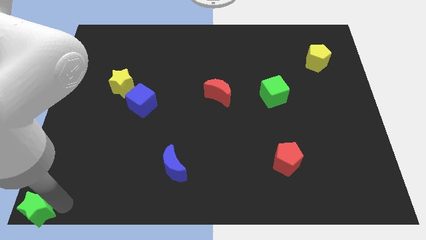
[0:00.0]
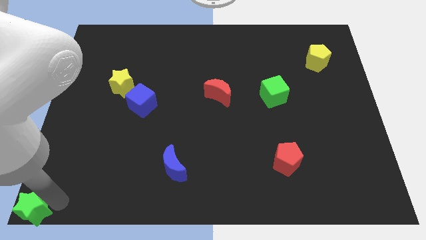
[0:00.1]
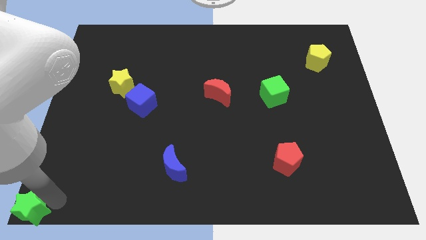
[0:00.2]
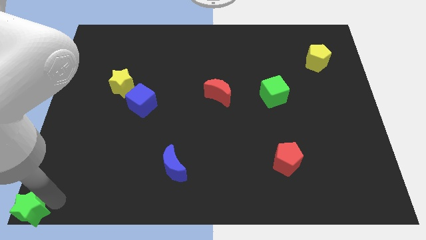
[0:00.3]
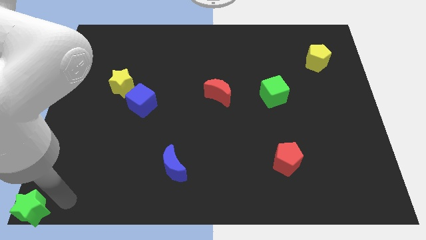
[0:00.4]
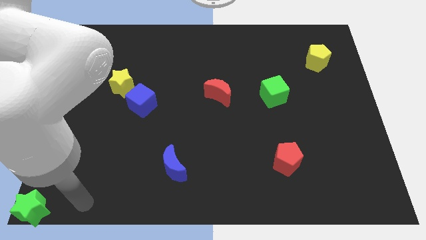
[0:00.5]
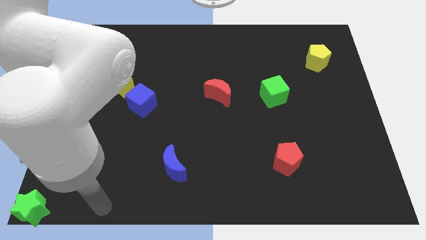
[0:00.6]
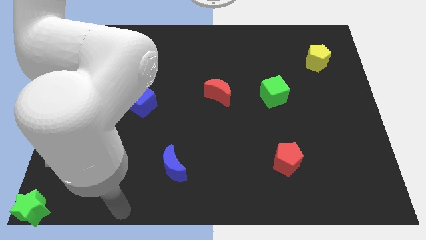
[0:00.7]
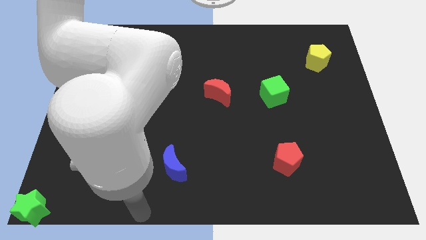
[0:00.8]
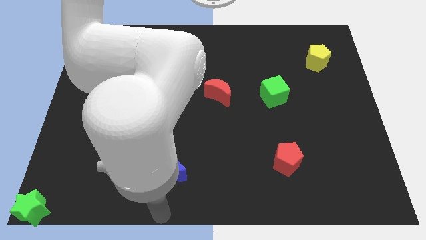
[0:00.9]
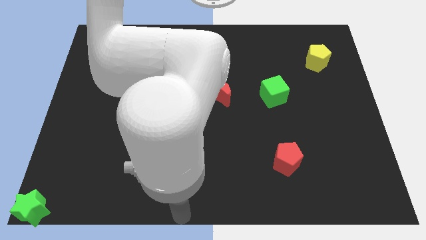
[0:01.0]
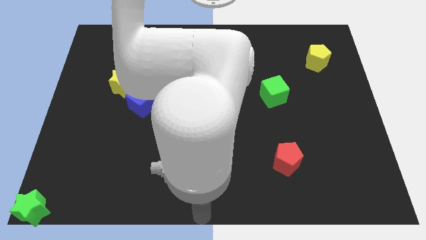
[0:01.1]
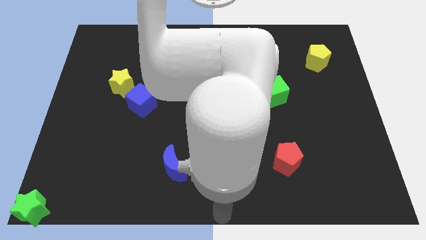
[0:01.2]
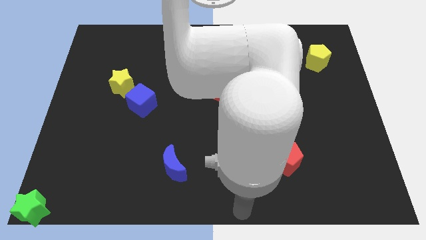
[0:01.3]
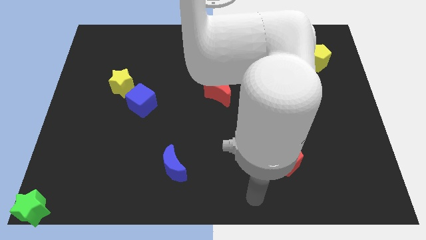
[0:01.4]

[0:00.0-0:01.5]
move the arm to the right side of the board

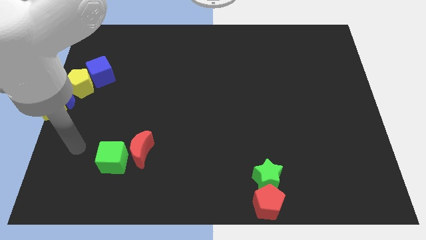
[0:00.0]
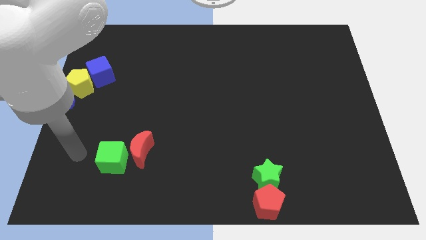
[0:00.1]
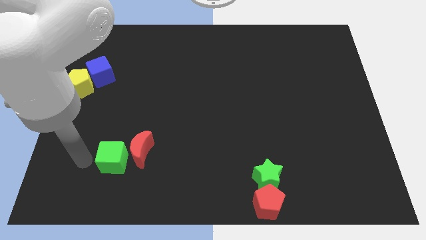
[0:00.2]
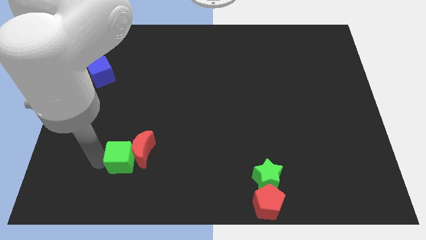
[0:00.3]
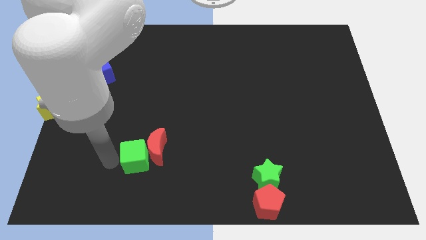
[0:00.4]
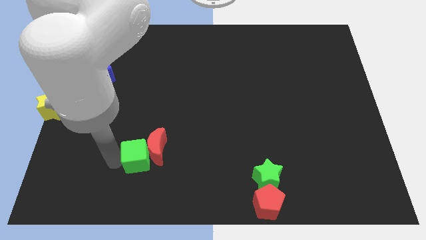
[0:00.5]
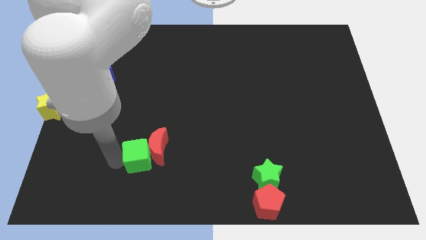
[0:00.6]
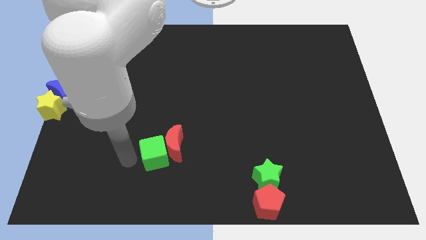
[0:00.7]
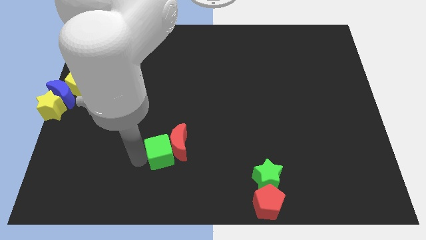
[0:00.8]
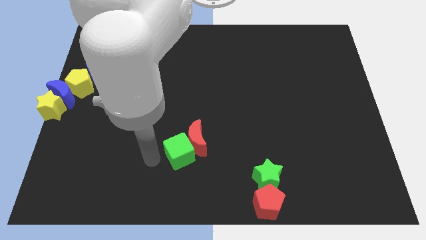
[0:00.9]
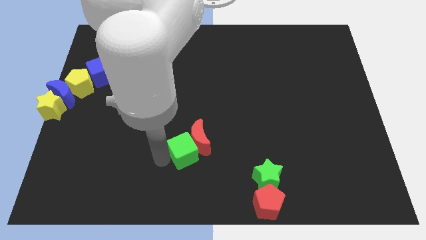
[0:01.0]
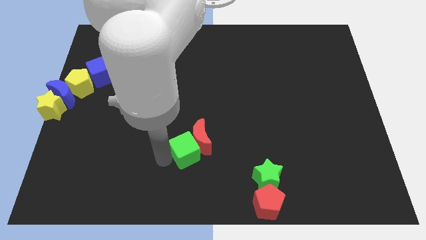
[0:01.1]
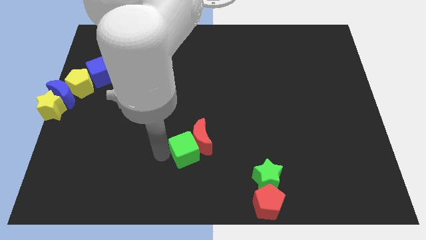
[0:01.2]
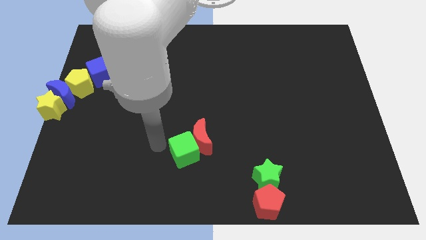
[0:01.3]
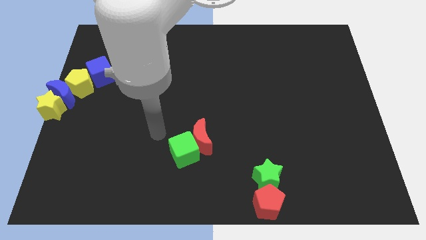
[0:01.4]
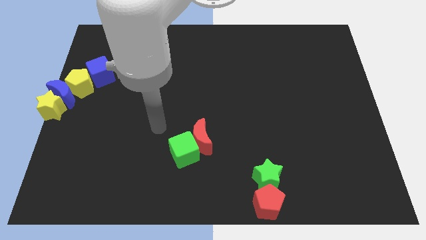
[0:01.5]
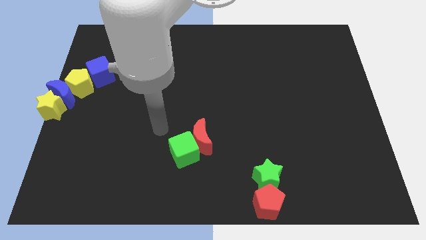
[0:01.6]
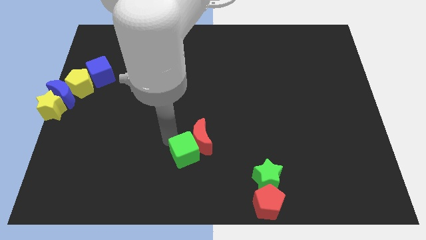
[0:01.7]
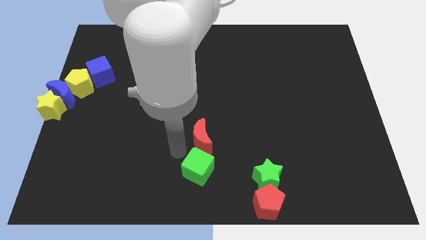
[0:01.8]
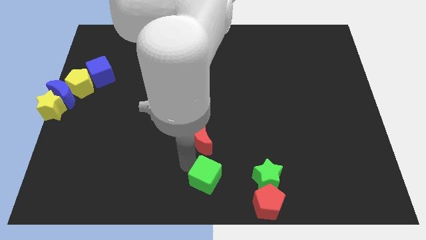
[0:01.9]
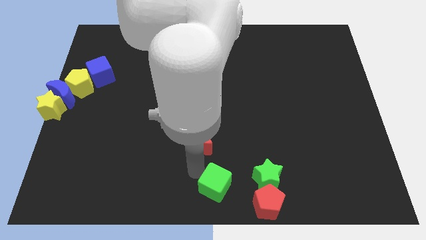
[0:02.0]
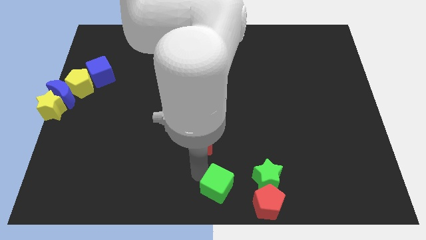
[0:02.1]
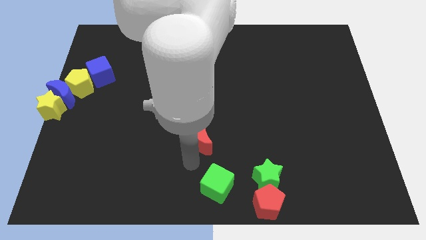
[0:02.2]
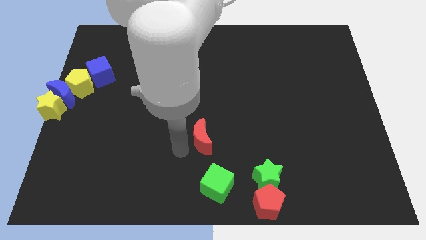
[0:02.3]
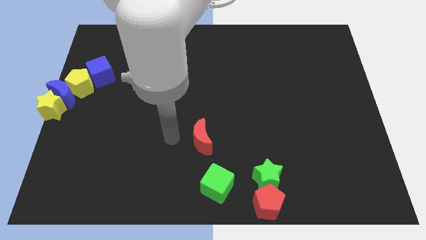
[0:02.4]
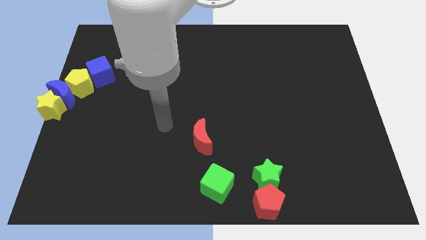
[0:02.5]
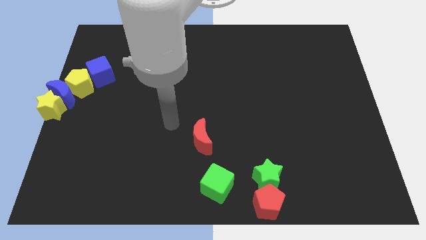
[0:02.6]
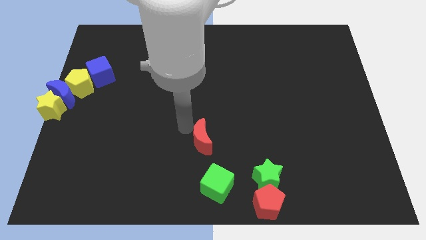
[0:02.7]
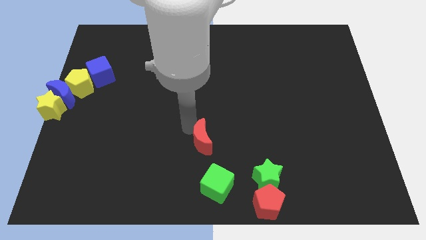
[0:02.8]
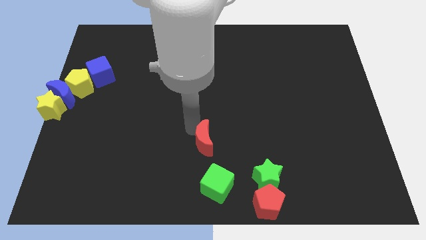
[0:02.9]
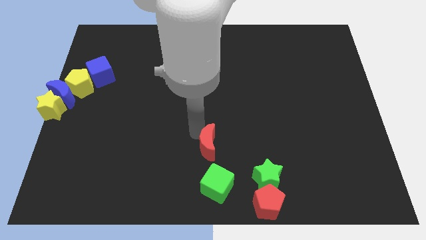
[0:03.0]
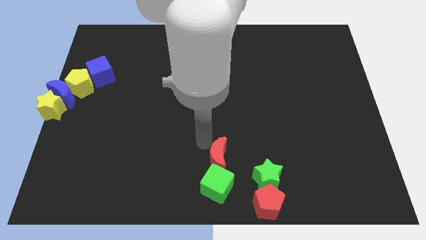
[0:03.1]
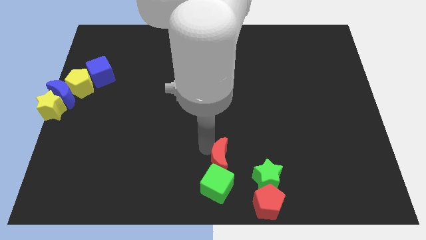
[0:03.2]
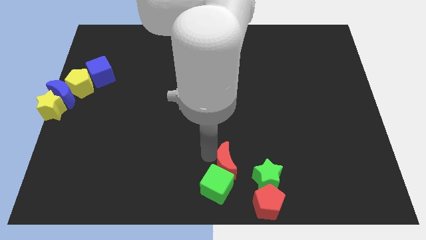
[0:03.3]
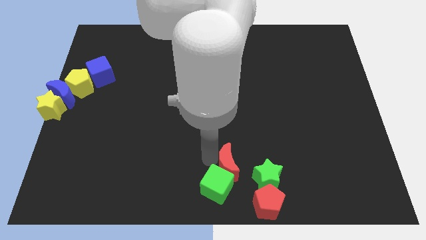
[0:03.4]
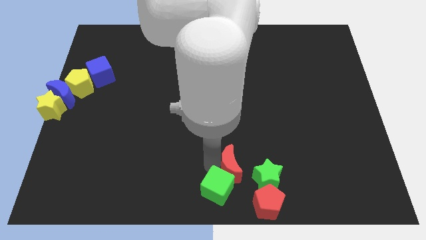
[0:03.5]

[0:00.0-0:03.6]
push the red moon and green cube to the bottom center

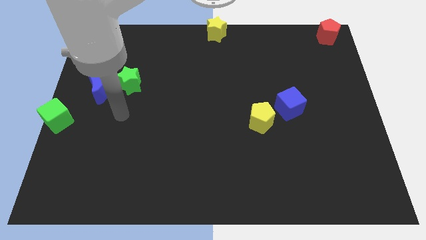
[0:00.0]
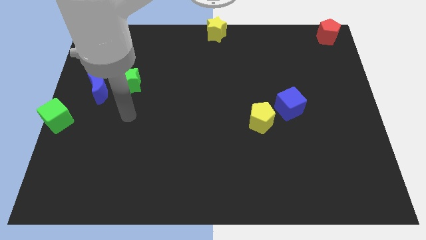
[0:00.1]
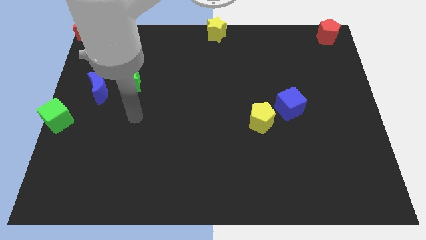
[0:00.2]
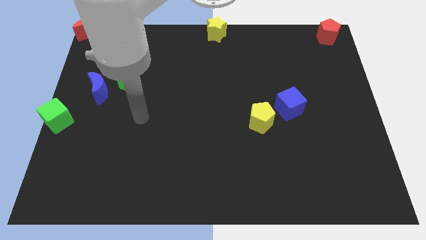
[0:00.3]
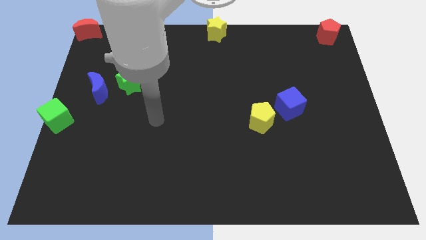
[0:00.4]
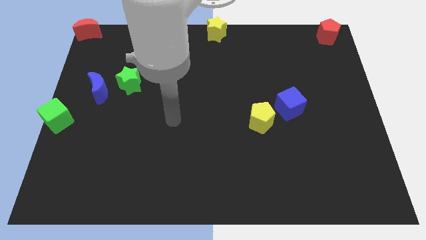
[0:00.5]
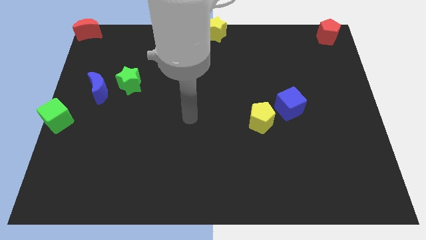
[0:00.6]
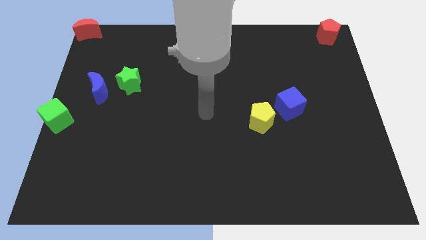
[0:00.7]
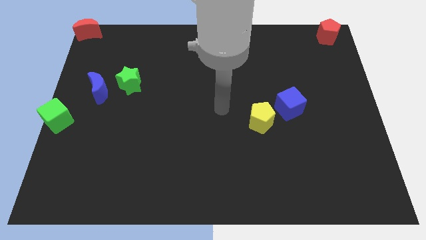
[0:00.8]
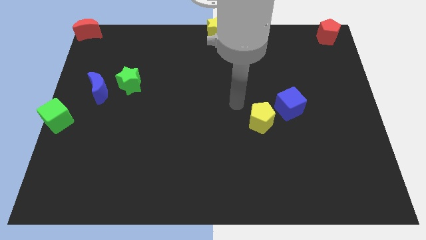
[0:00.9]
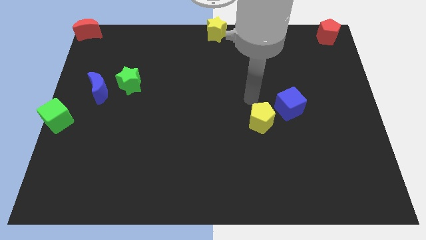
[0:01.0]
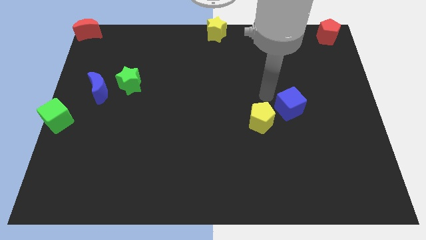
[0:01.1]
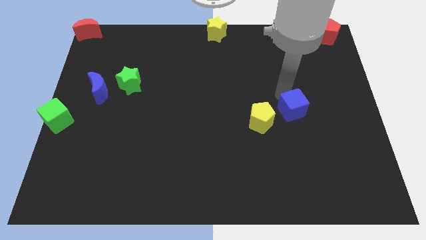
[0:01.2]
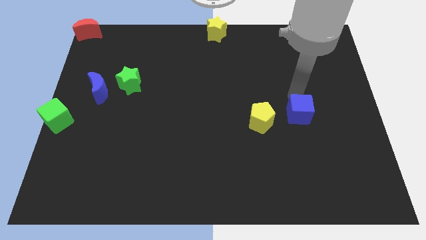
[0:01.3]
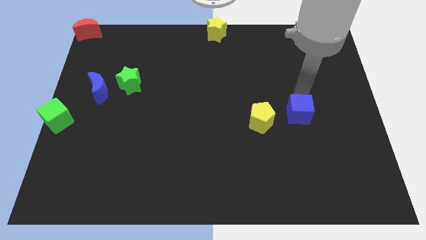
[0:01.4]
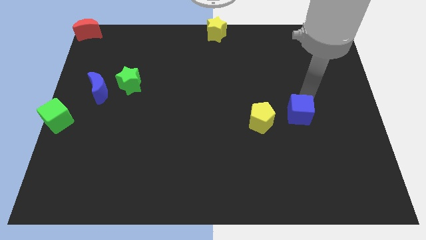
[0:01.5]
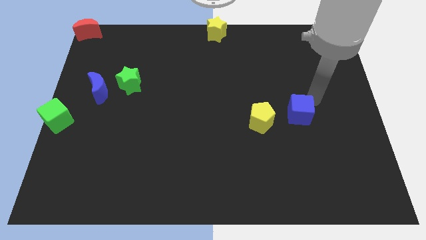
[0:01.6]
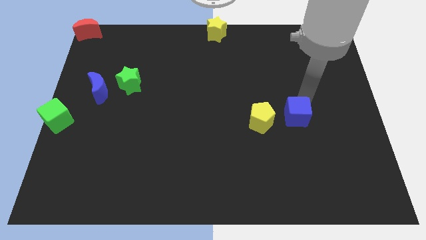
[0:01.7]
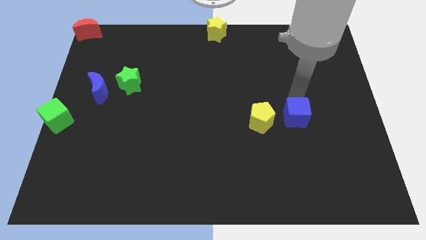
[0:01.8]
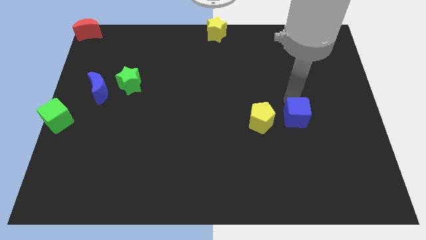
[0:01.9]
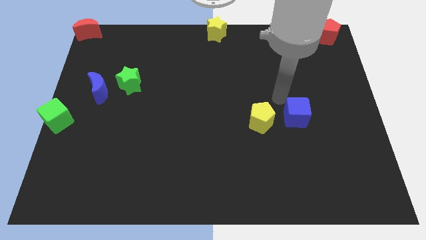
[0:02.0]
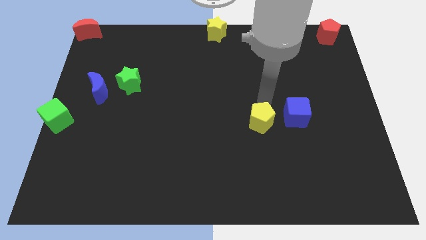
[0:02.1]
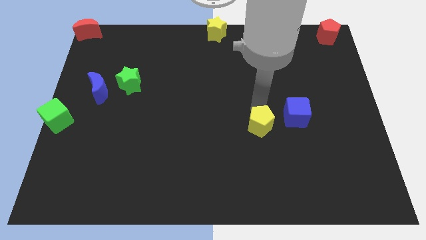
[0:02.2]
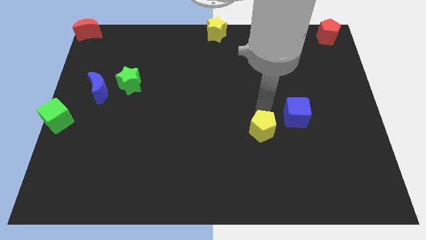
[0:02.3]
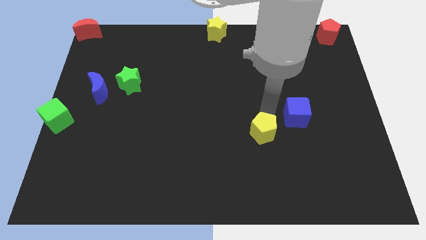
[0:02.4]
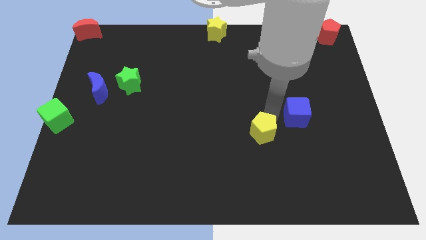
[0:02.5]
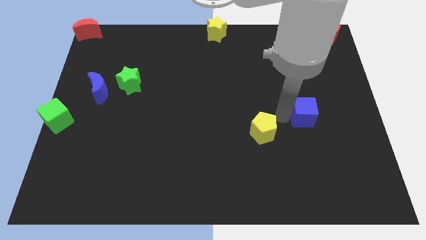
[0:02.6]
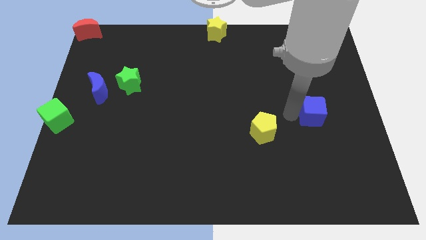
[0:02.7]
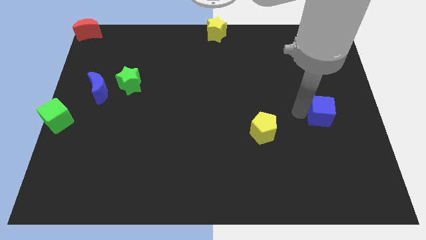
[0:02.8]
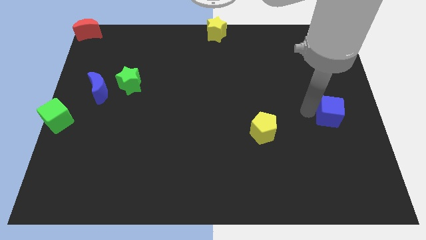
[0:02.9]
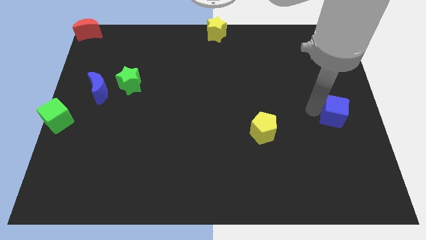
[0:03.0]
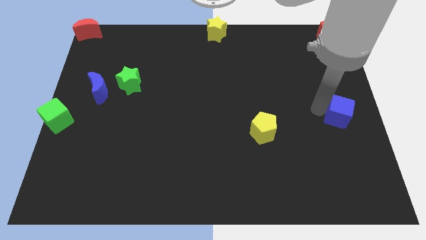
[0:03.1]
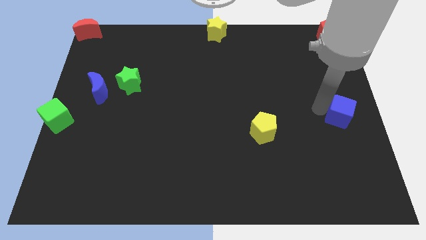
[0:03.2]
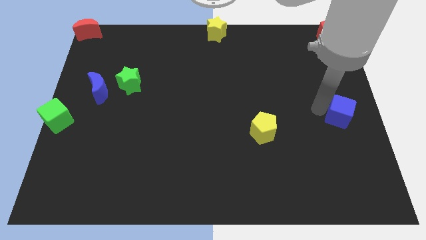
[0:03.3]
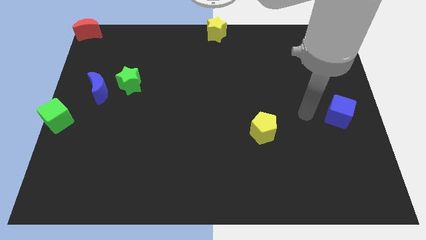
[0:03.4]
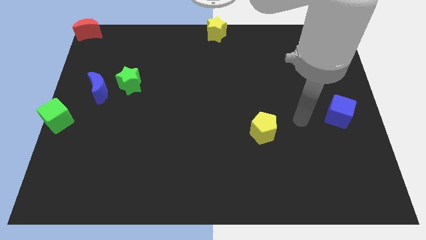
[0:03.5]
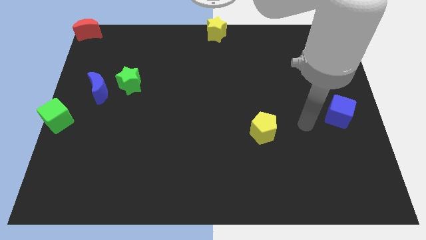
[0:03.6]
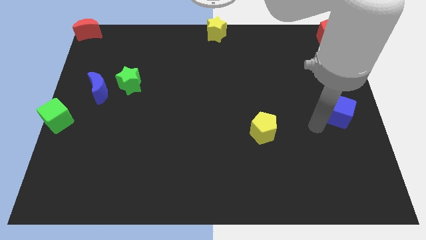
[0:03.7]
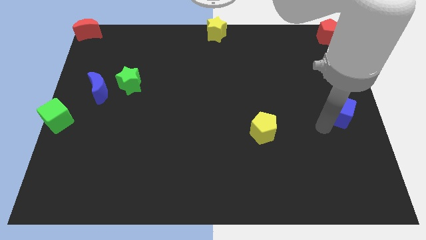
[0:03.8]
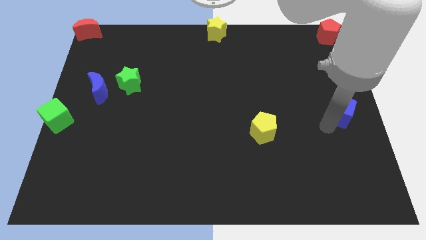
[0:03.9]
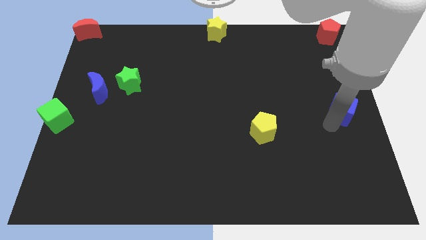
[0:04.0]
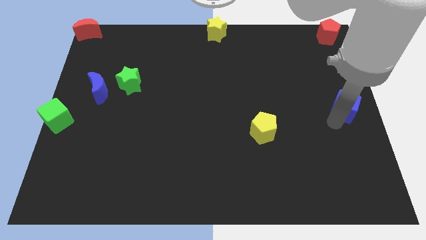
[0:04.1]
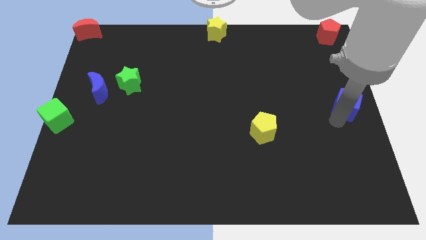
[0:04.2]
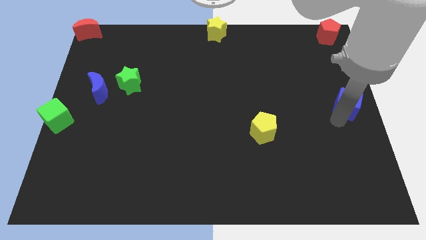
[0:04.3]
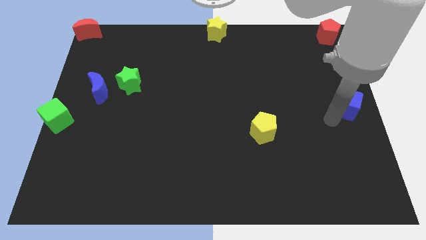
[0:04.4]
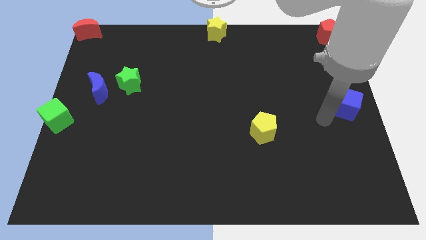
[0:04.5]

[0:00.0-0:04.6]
move the blue cube to the center right of the board
